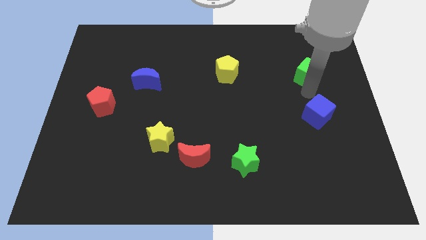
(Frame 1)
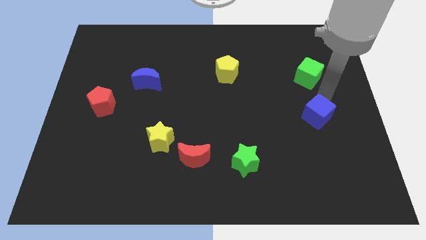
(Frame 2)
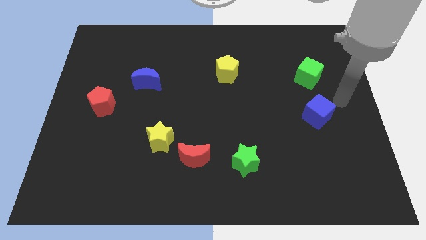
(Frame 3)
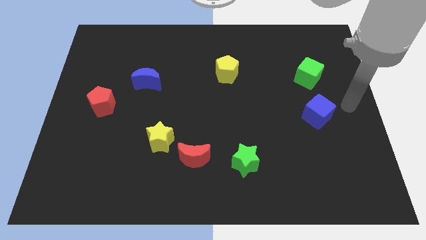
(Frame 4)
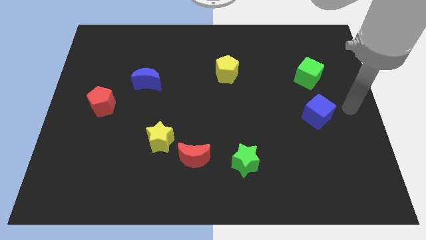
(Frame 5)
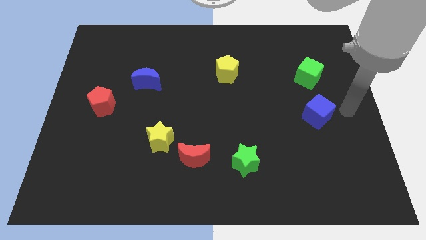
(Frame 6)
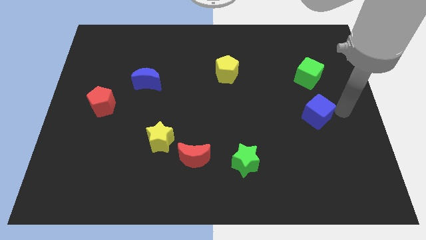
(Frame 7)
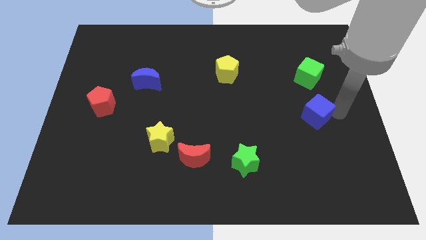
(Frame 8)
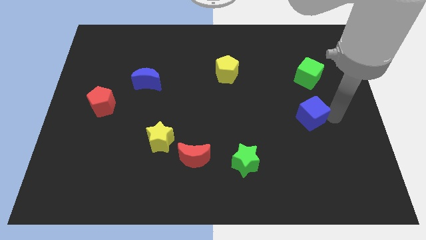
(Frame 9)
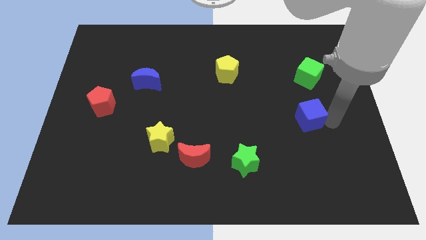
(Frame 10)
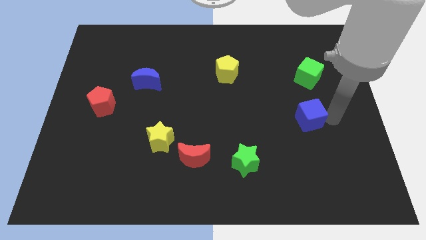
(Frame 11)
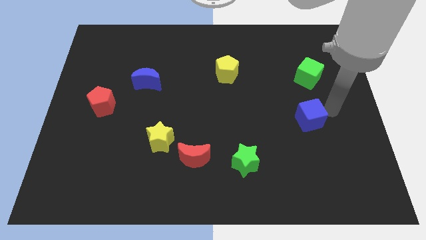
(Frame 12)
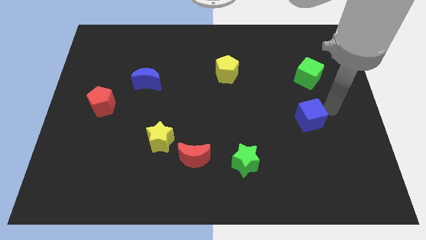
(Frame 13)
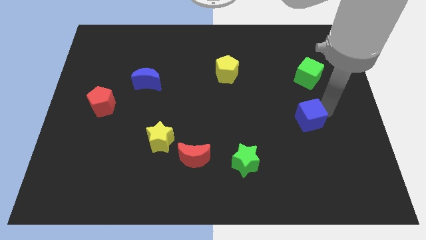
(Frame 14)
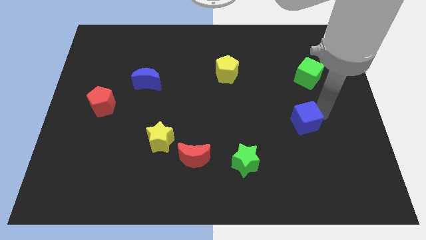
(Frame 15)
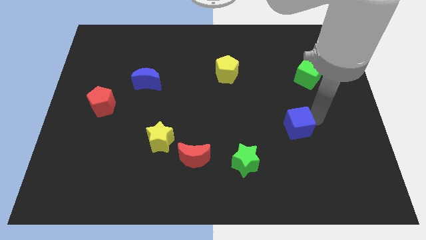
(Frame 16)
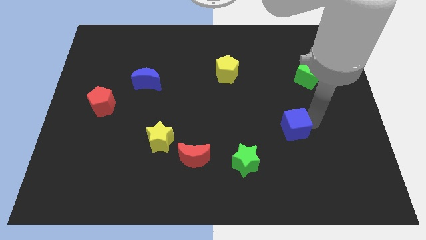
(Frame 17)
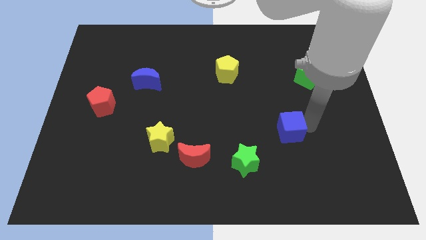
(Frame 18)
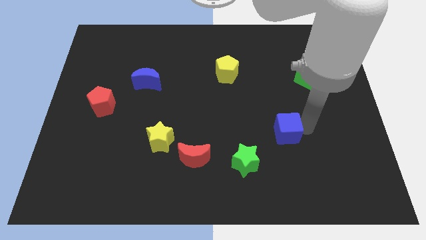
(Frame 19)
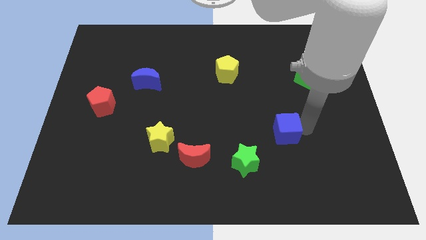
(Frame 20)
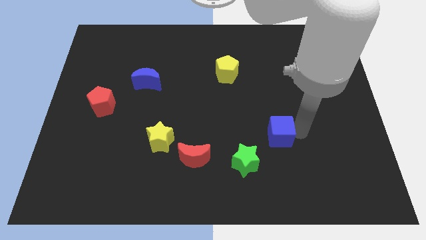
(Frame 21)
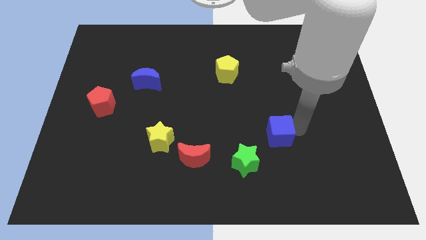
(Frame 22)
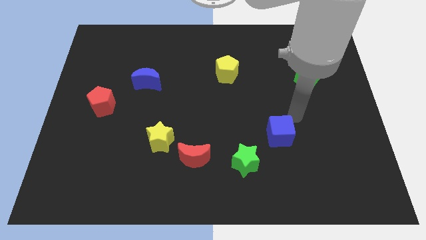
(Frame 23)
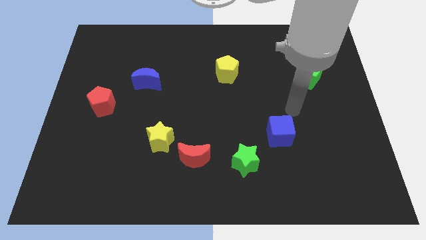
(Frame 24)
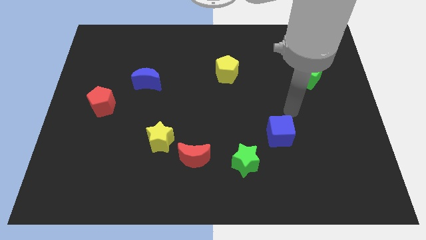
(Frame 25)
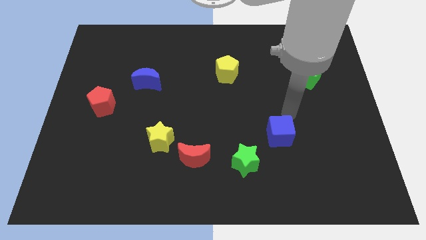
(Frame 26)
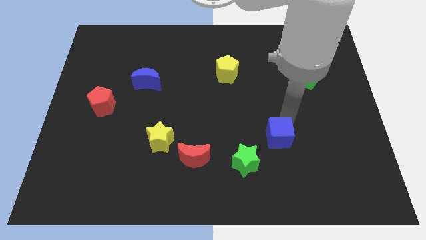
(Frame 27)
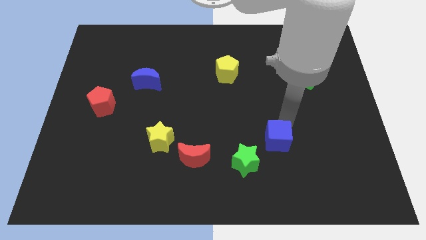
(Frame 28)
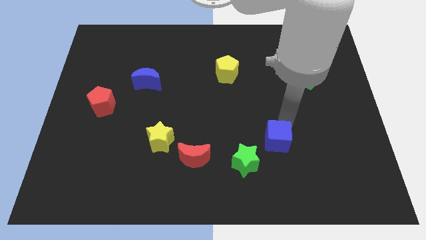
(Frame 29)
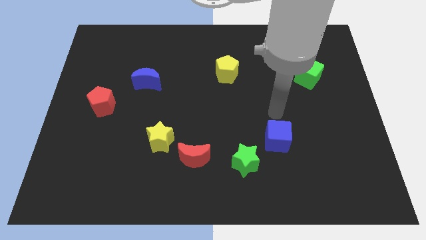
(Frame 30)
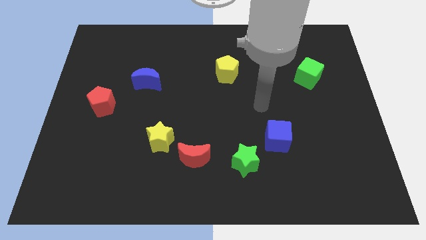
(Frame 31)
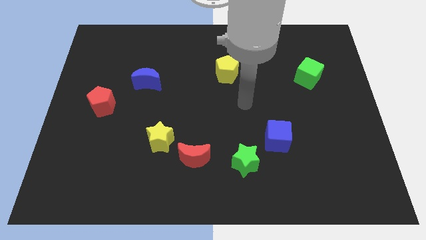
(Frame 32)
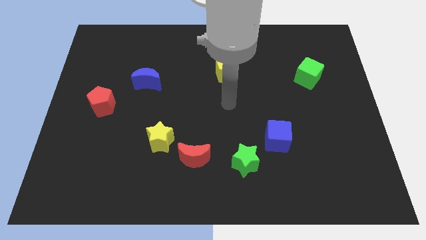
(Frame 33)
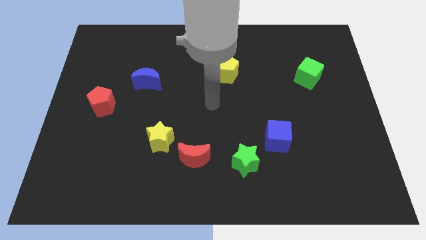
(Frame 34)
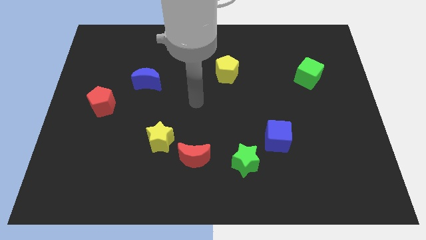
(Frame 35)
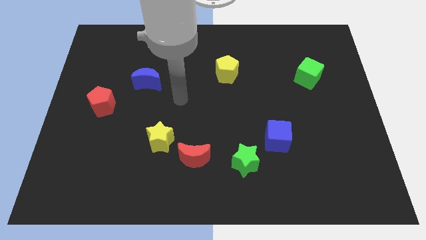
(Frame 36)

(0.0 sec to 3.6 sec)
place the blue cube diagonally top right to green star

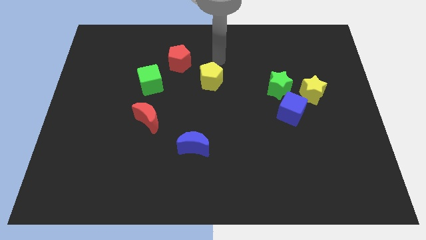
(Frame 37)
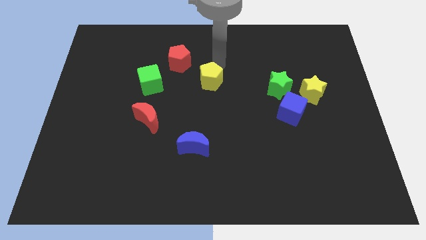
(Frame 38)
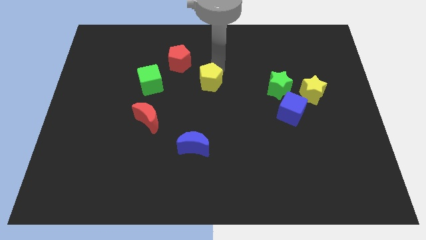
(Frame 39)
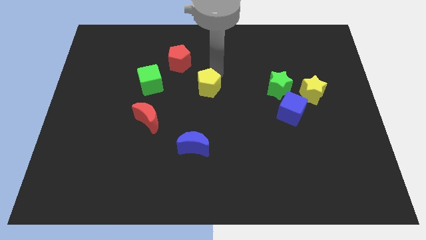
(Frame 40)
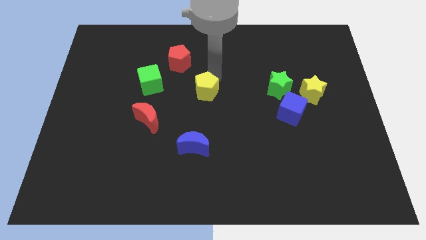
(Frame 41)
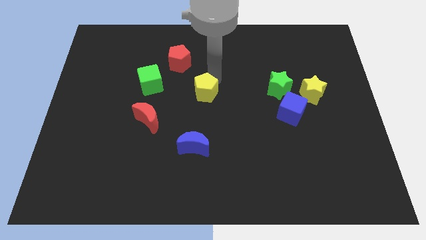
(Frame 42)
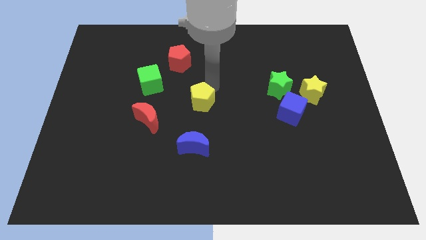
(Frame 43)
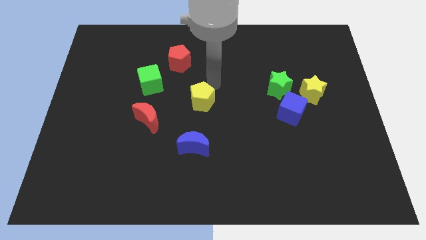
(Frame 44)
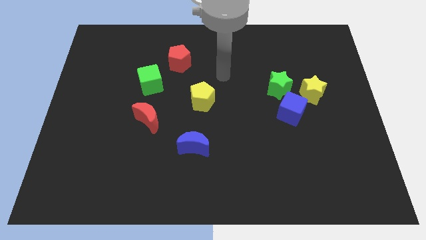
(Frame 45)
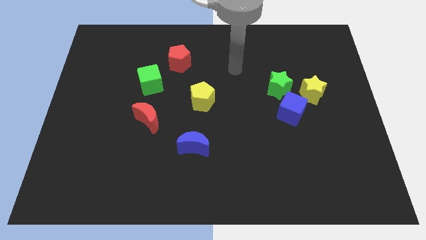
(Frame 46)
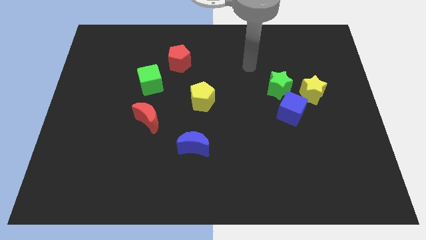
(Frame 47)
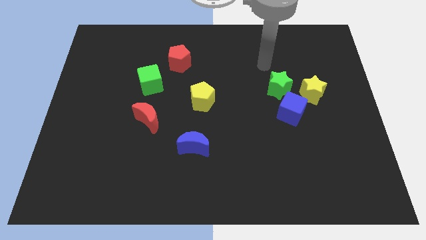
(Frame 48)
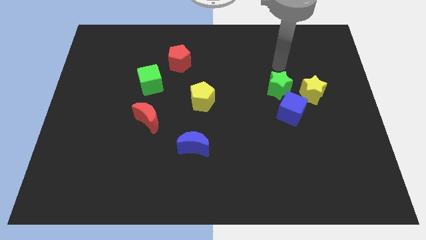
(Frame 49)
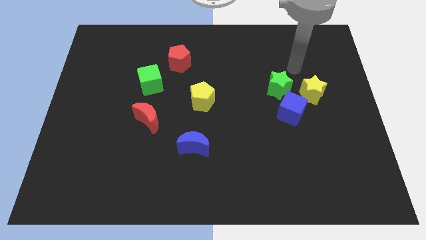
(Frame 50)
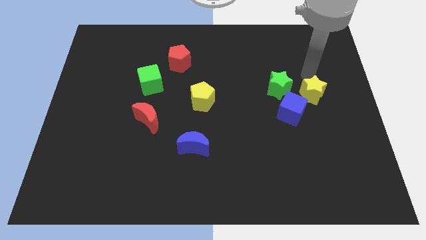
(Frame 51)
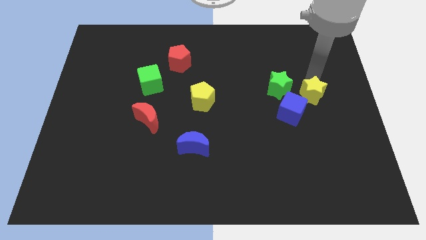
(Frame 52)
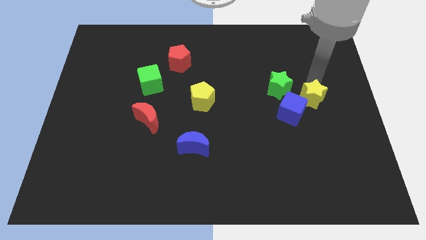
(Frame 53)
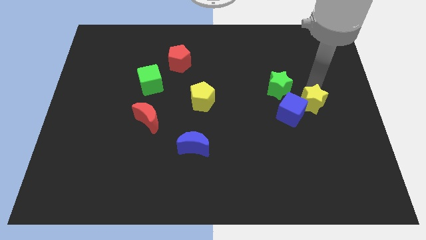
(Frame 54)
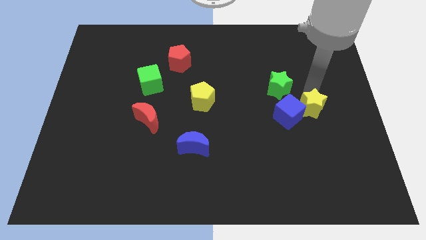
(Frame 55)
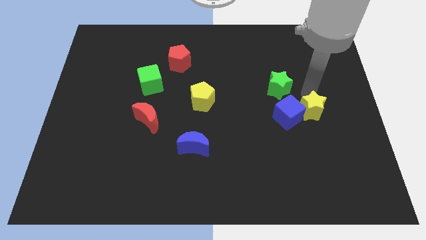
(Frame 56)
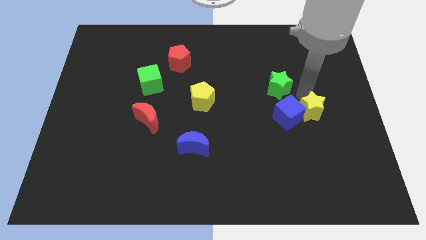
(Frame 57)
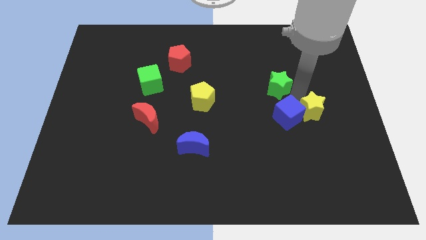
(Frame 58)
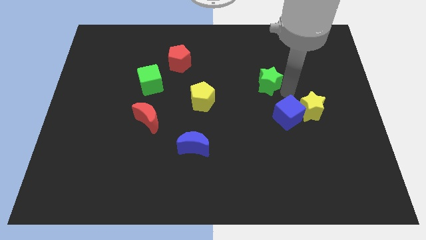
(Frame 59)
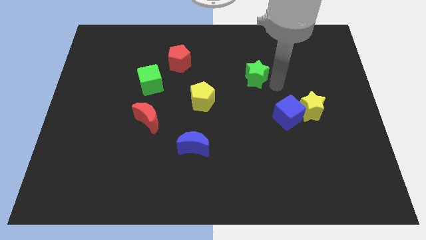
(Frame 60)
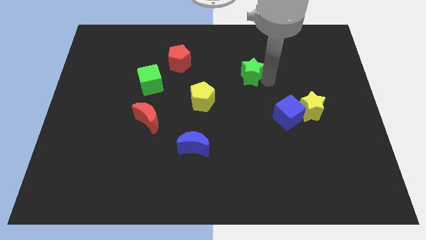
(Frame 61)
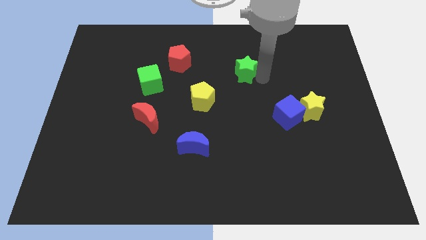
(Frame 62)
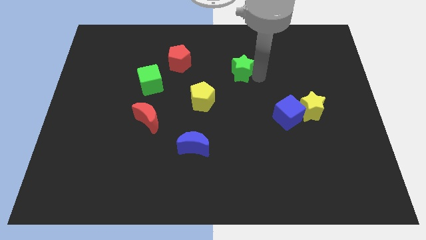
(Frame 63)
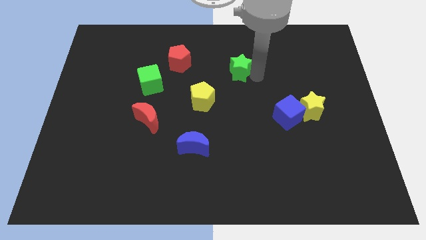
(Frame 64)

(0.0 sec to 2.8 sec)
move the green star towards the red pentagon

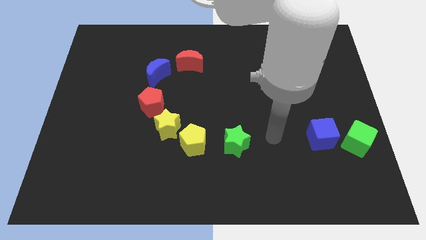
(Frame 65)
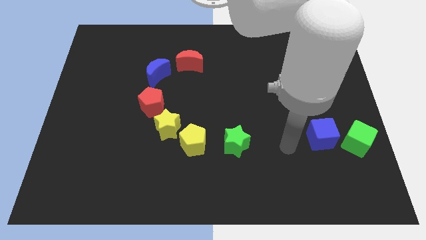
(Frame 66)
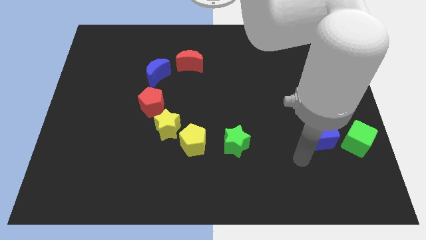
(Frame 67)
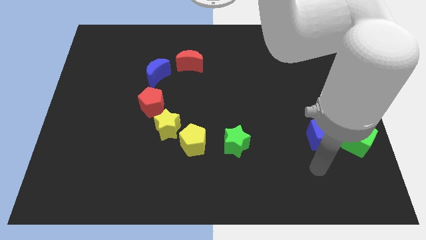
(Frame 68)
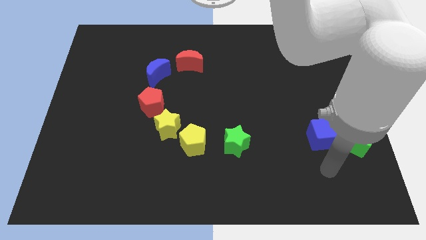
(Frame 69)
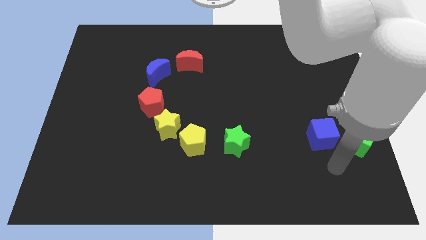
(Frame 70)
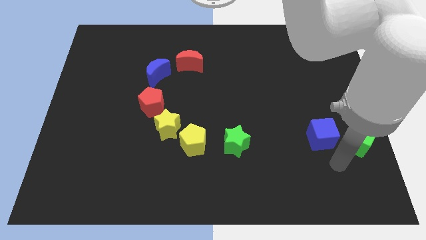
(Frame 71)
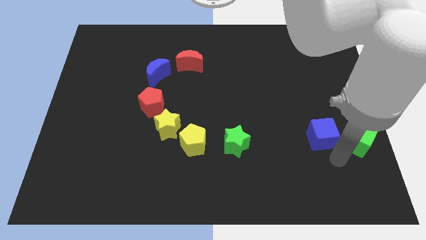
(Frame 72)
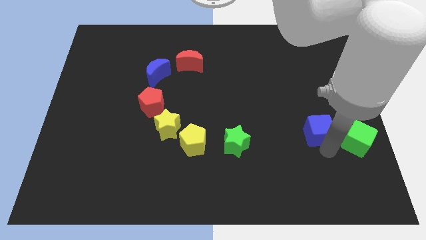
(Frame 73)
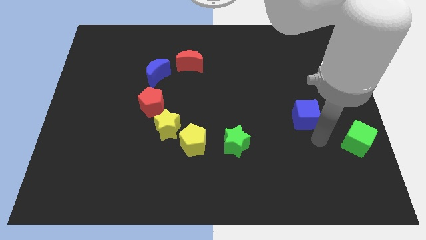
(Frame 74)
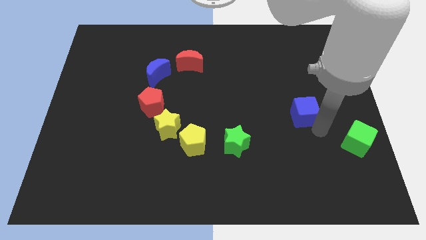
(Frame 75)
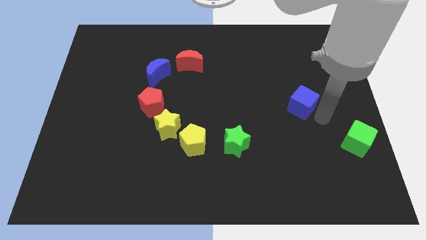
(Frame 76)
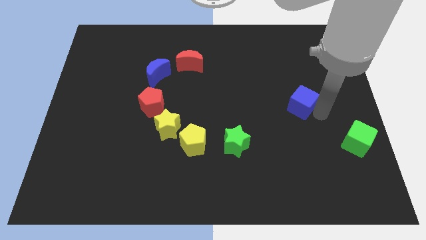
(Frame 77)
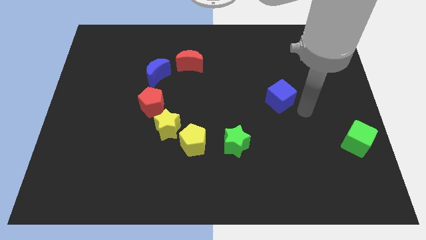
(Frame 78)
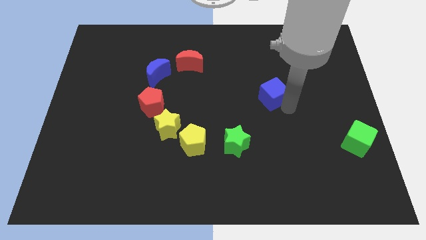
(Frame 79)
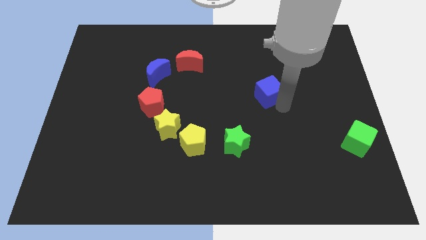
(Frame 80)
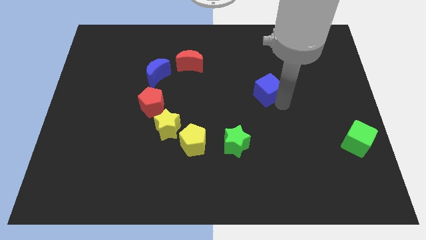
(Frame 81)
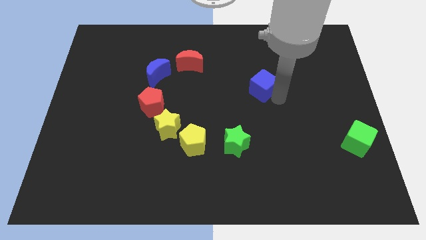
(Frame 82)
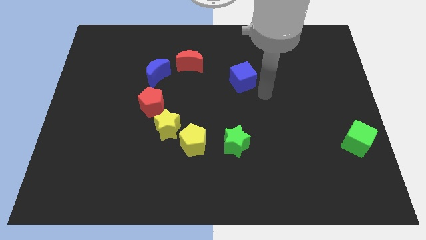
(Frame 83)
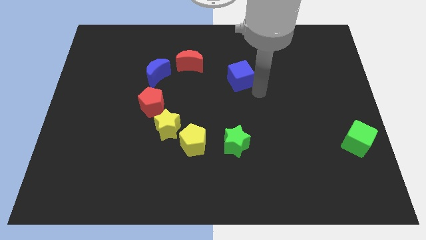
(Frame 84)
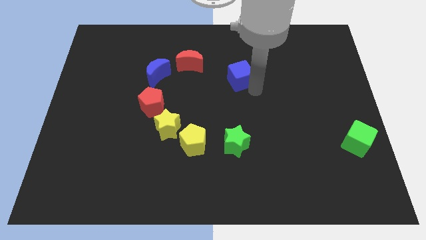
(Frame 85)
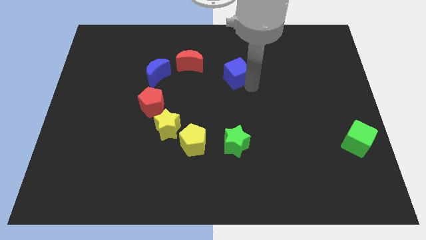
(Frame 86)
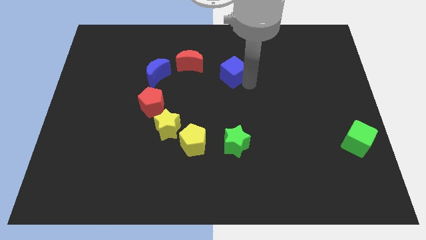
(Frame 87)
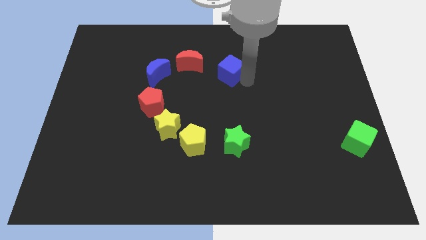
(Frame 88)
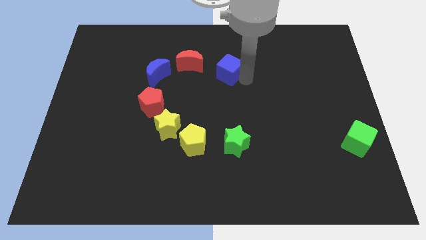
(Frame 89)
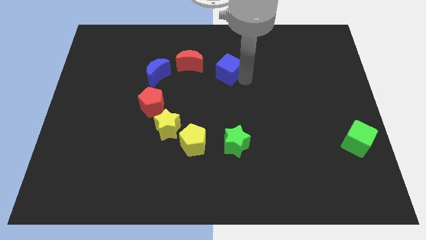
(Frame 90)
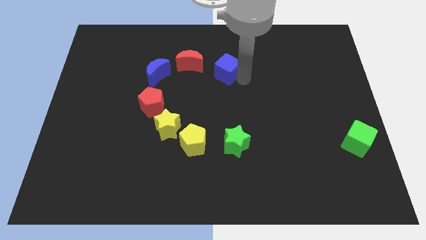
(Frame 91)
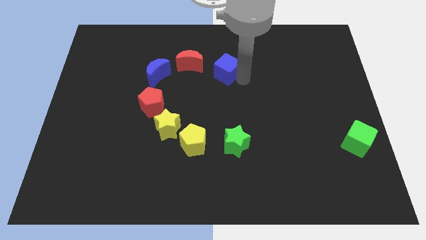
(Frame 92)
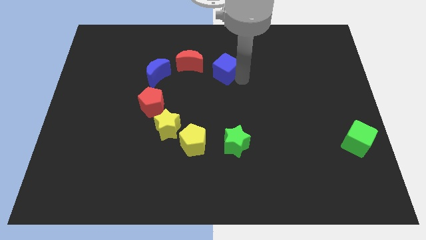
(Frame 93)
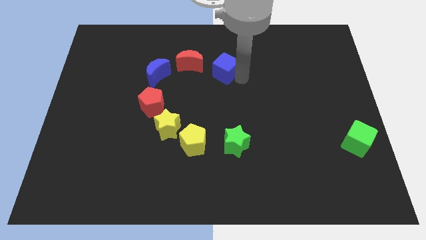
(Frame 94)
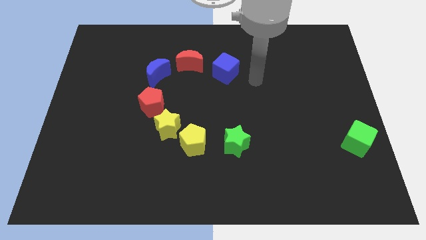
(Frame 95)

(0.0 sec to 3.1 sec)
move the blue cube towards the right of the red crescent
